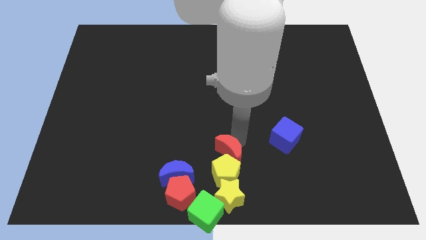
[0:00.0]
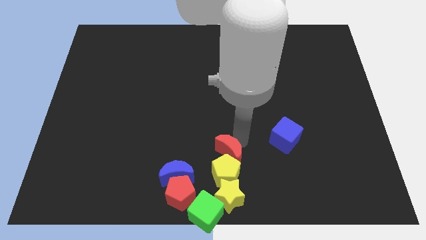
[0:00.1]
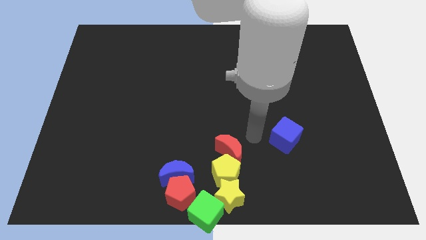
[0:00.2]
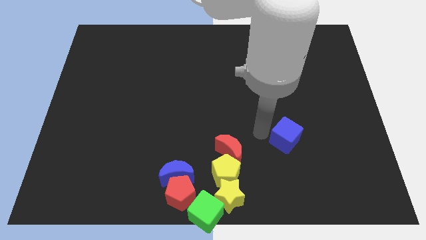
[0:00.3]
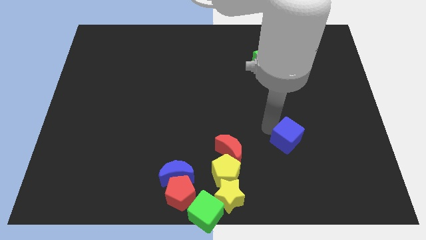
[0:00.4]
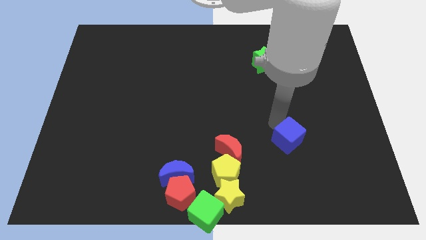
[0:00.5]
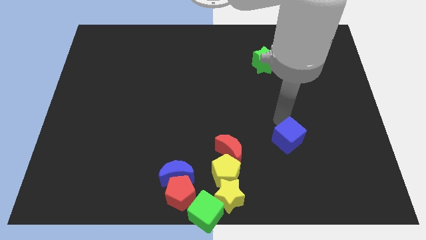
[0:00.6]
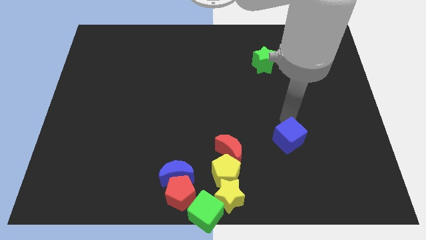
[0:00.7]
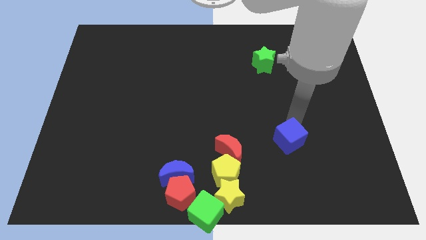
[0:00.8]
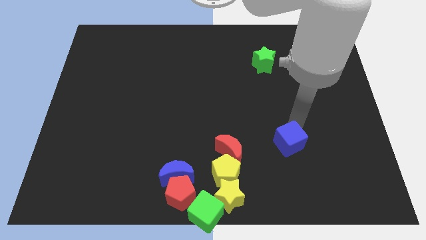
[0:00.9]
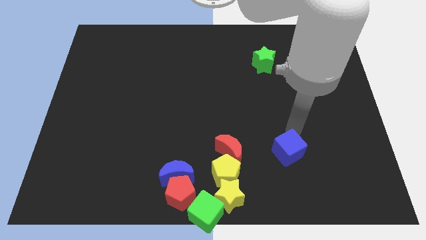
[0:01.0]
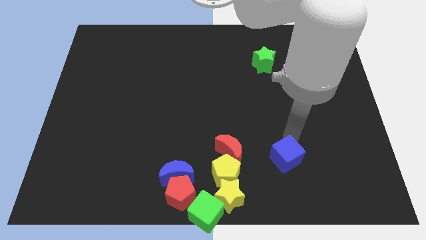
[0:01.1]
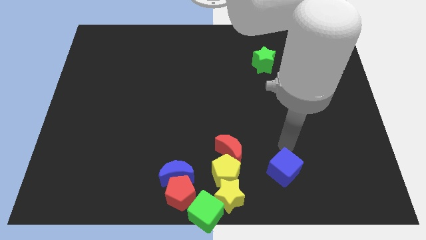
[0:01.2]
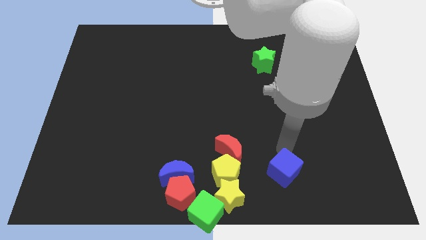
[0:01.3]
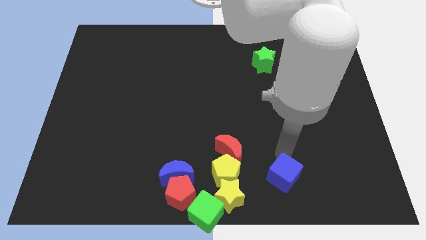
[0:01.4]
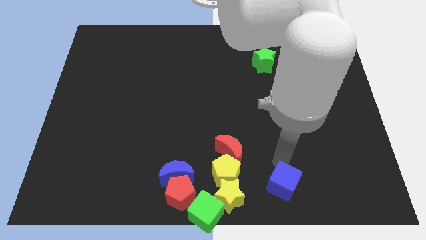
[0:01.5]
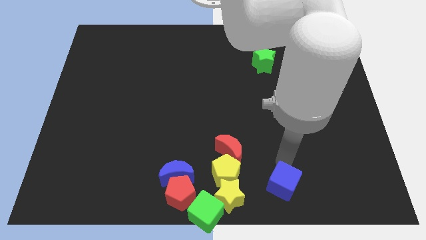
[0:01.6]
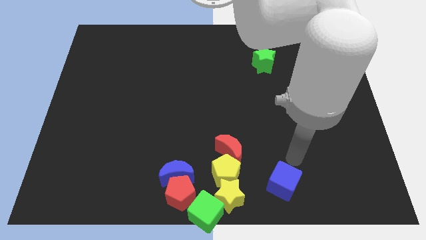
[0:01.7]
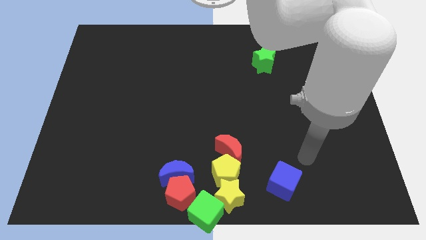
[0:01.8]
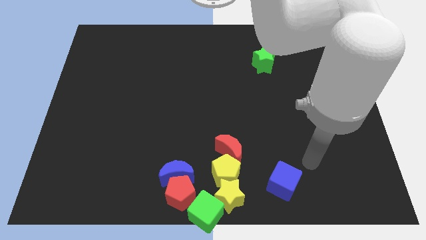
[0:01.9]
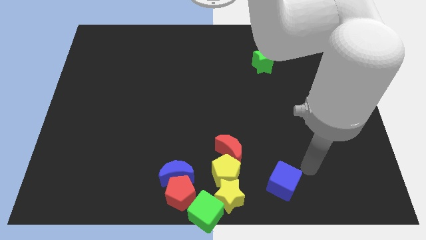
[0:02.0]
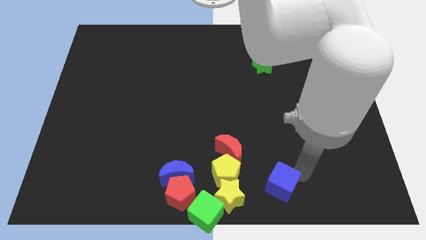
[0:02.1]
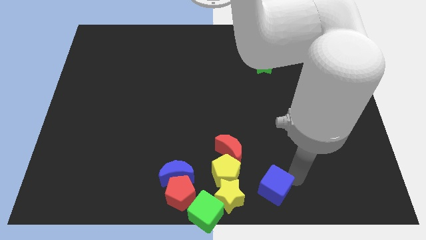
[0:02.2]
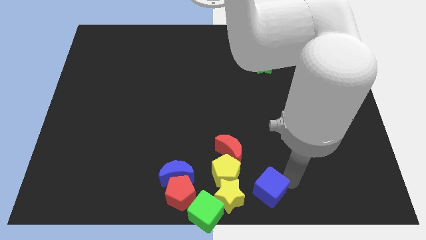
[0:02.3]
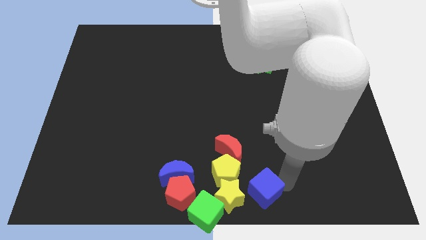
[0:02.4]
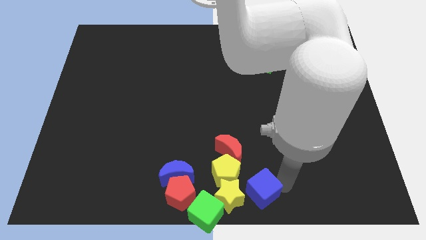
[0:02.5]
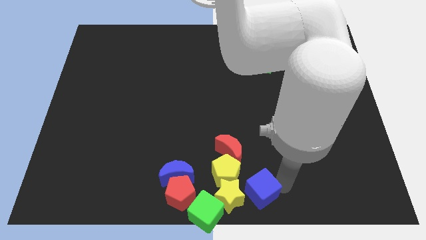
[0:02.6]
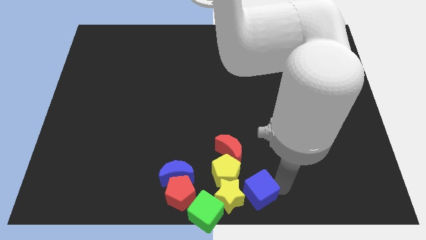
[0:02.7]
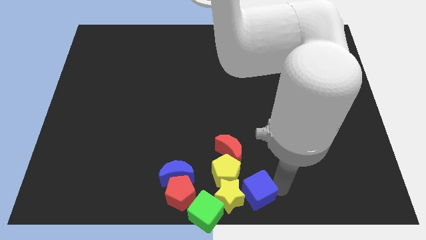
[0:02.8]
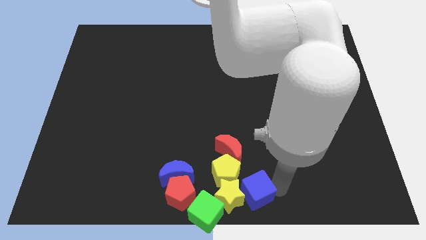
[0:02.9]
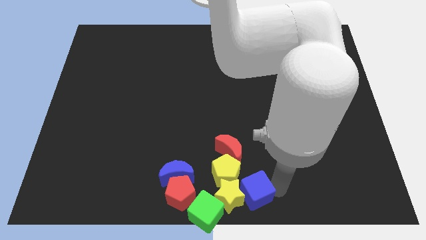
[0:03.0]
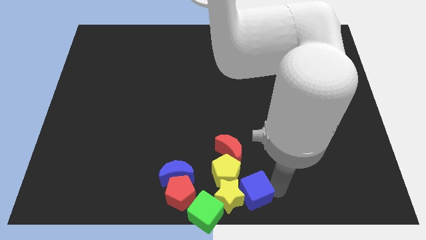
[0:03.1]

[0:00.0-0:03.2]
place blue cube to the right of yellow star

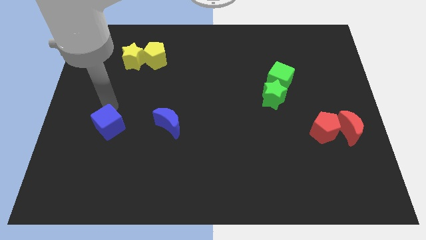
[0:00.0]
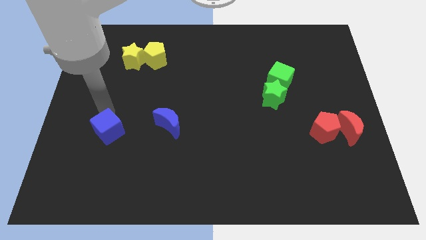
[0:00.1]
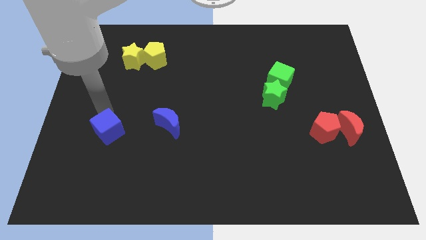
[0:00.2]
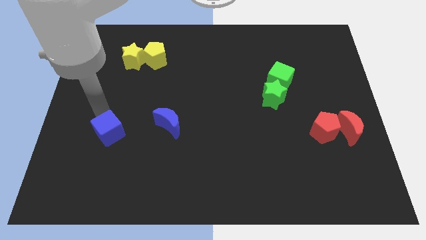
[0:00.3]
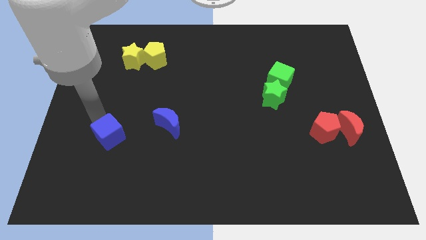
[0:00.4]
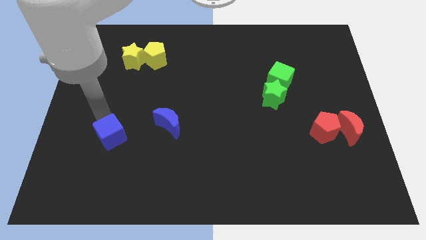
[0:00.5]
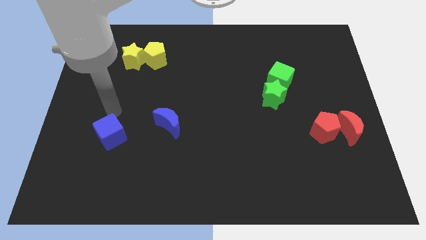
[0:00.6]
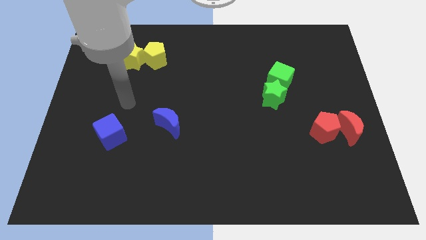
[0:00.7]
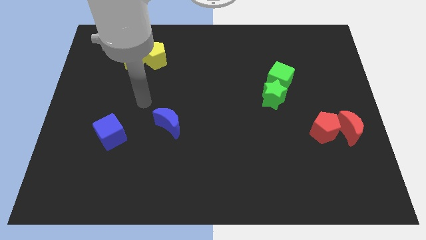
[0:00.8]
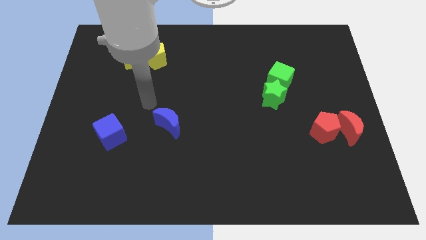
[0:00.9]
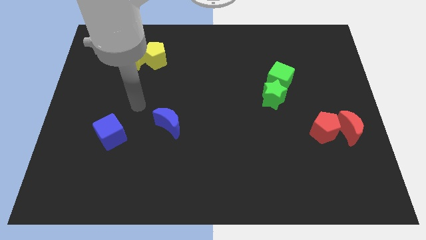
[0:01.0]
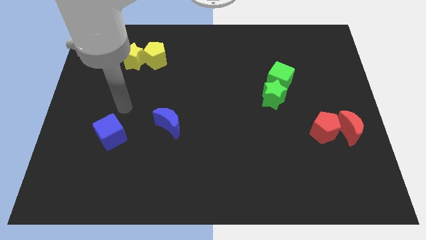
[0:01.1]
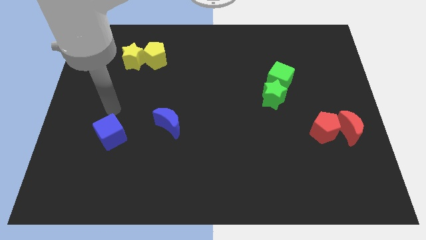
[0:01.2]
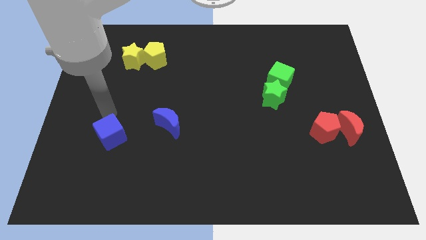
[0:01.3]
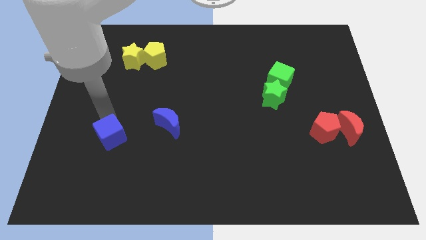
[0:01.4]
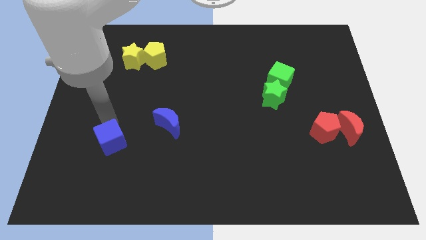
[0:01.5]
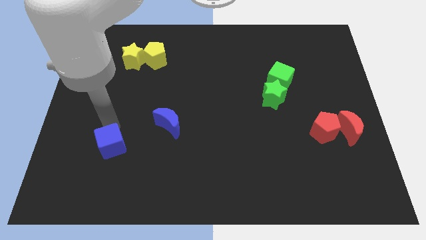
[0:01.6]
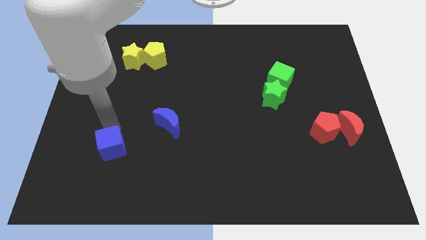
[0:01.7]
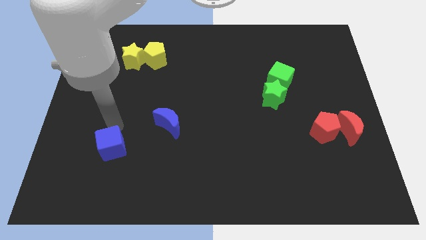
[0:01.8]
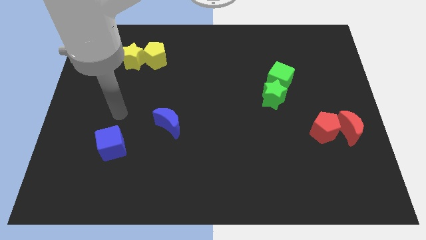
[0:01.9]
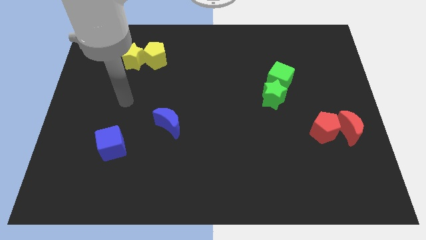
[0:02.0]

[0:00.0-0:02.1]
push the blue cube diagonally bottom left to the blue moon

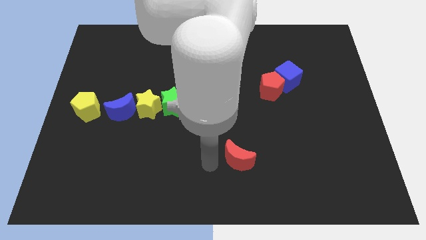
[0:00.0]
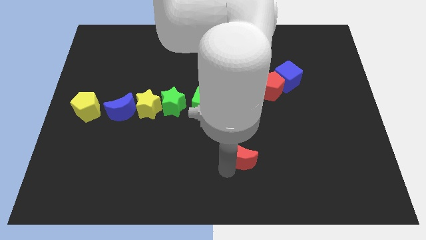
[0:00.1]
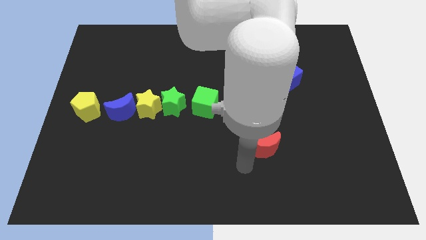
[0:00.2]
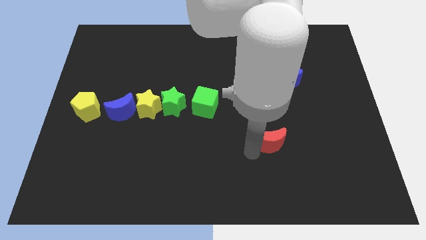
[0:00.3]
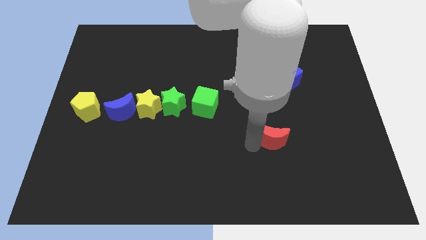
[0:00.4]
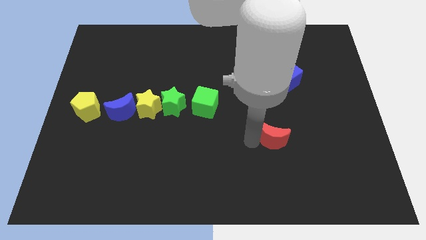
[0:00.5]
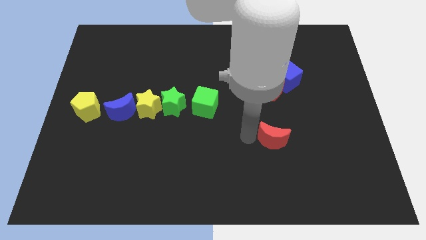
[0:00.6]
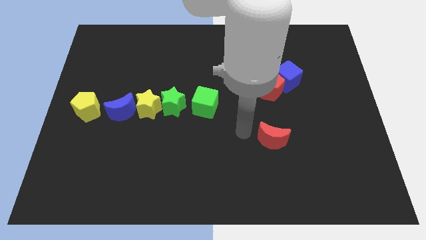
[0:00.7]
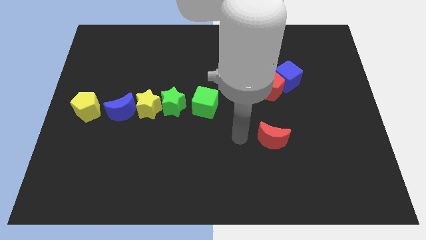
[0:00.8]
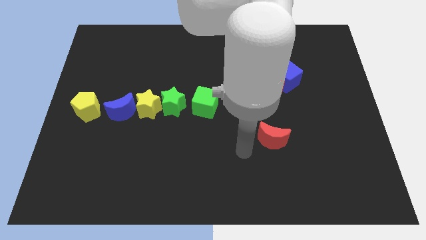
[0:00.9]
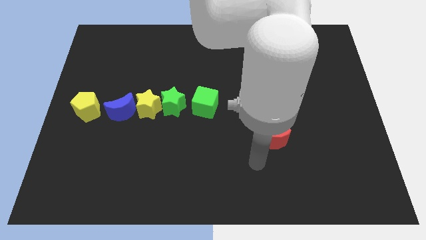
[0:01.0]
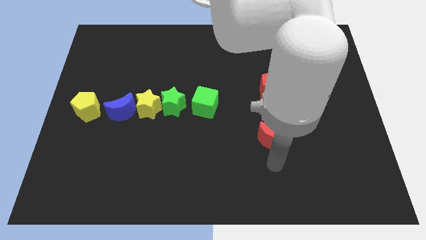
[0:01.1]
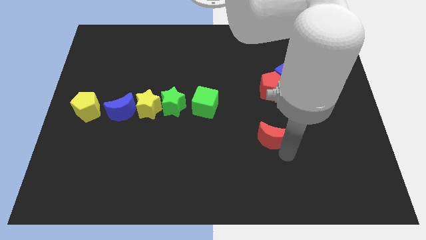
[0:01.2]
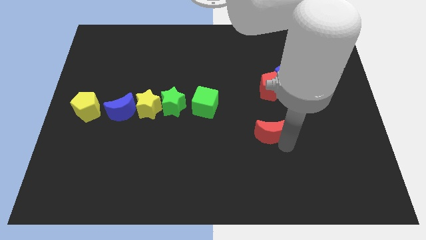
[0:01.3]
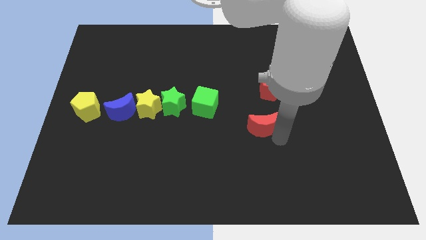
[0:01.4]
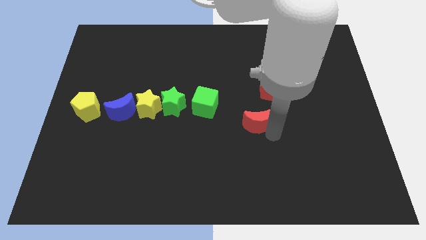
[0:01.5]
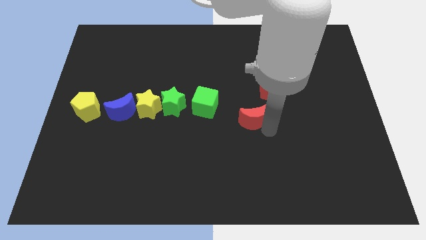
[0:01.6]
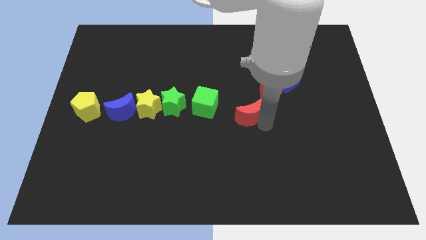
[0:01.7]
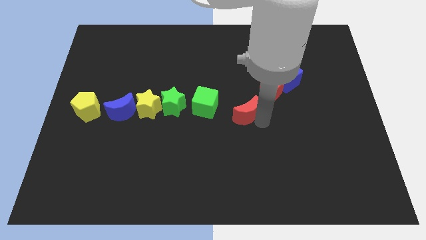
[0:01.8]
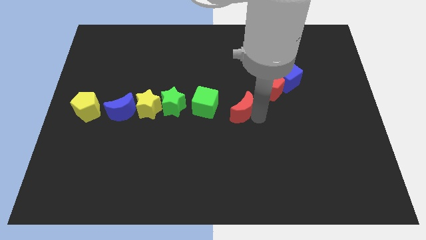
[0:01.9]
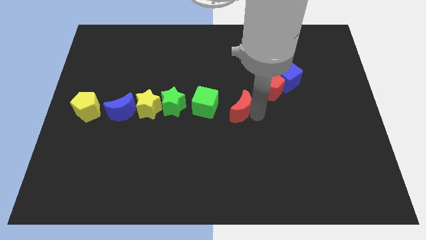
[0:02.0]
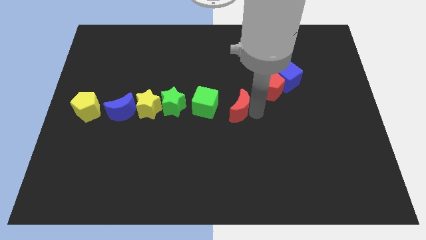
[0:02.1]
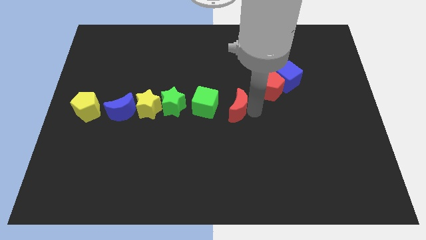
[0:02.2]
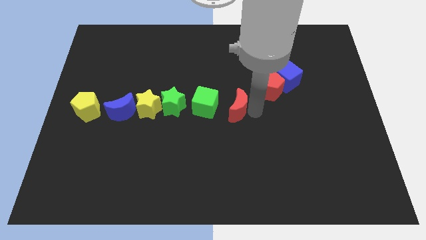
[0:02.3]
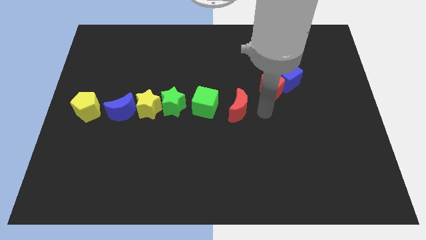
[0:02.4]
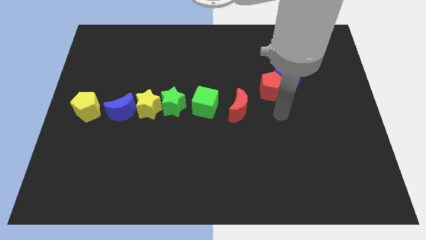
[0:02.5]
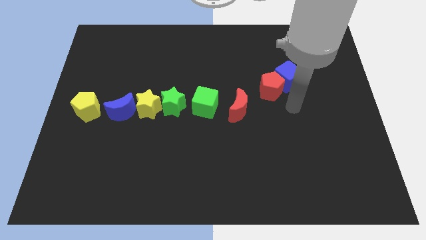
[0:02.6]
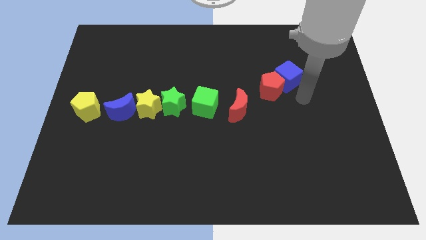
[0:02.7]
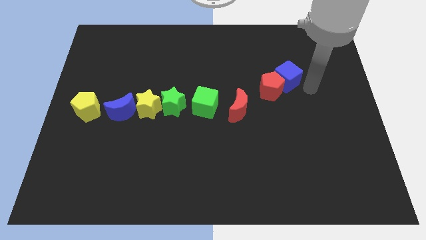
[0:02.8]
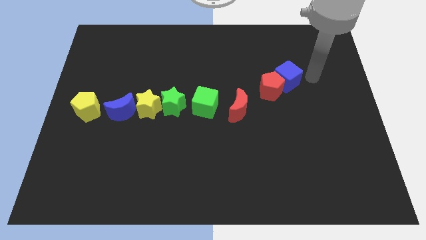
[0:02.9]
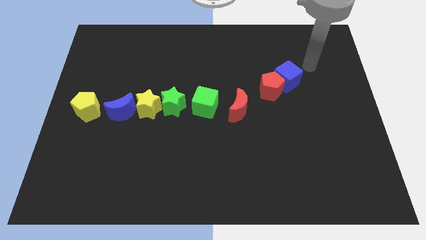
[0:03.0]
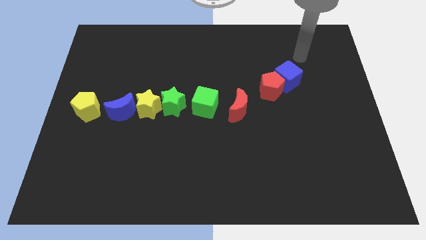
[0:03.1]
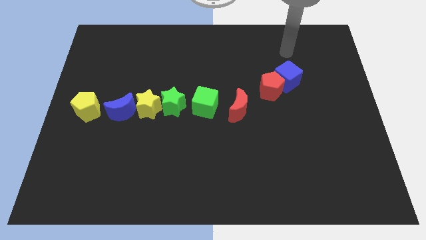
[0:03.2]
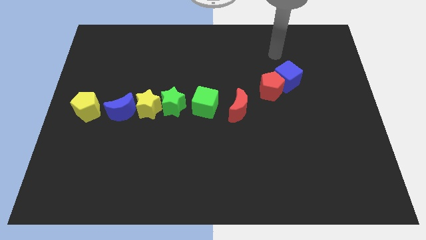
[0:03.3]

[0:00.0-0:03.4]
place the red moon beside the green cube to form a line

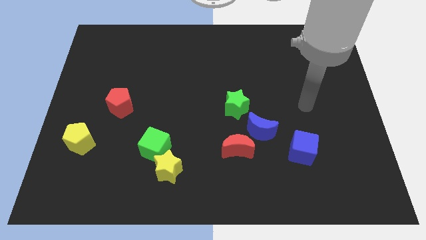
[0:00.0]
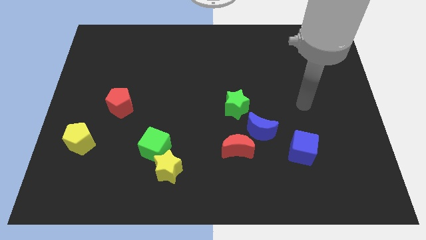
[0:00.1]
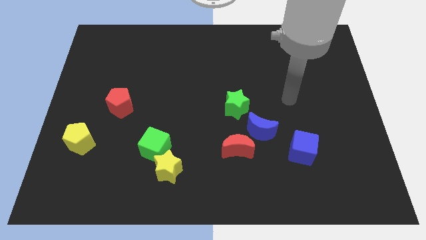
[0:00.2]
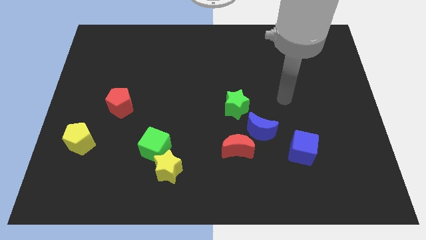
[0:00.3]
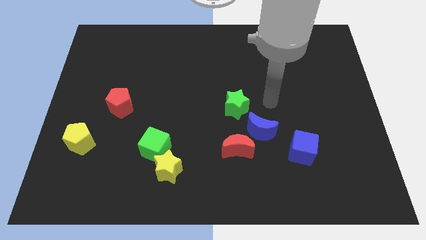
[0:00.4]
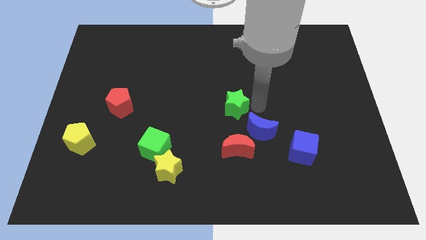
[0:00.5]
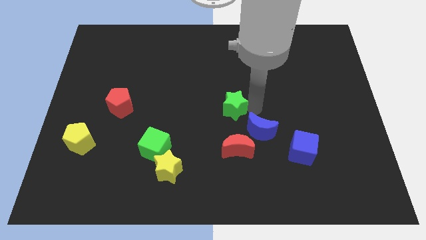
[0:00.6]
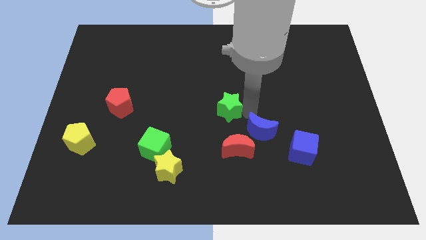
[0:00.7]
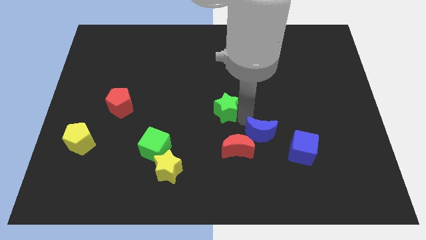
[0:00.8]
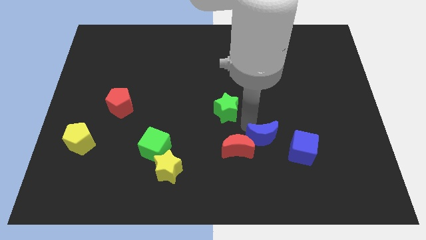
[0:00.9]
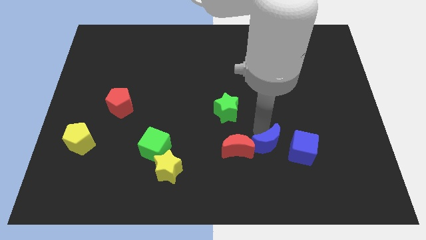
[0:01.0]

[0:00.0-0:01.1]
separate the green star and the blue moon
